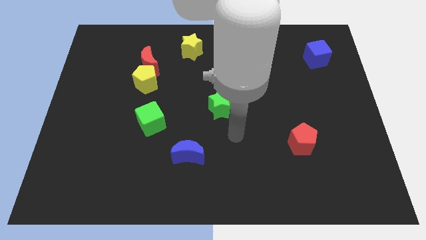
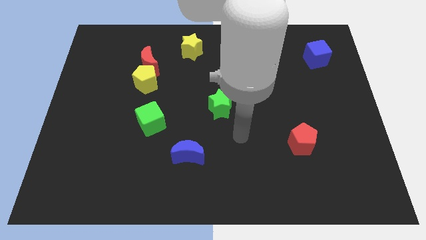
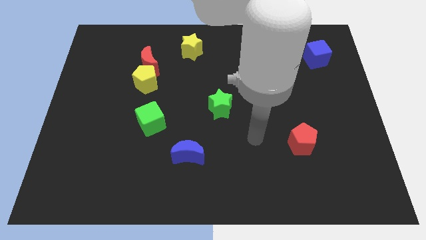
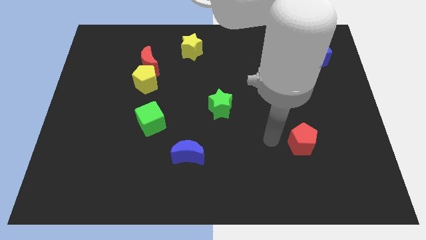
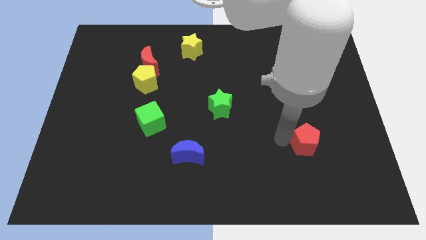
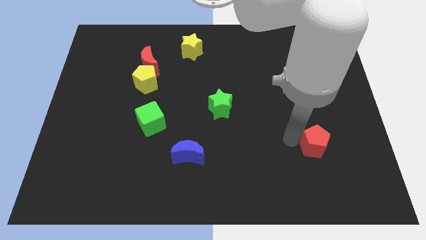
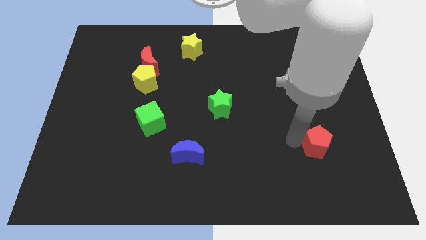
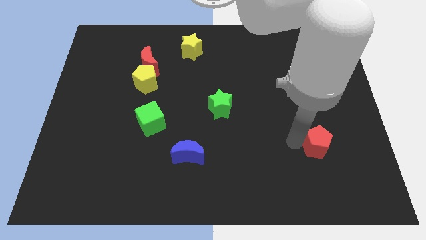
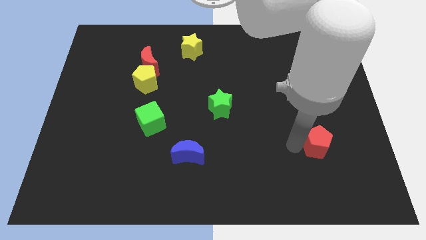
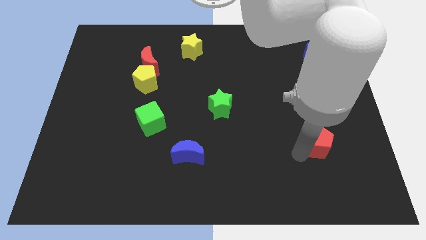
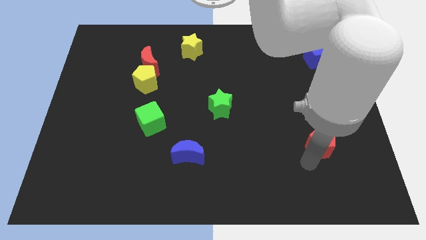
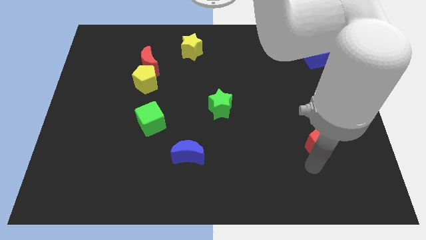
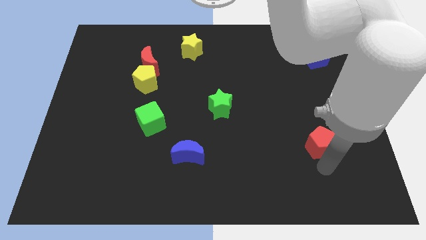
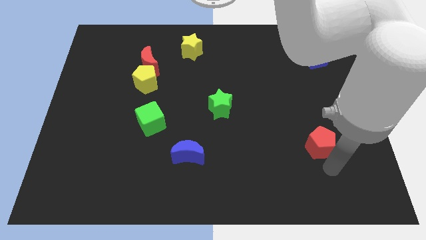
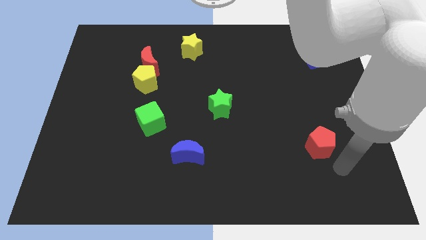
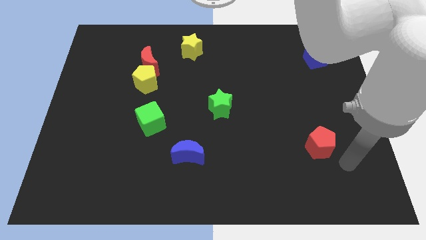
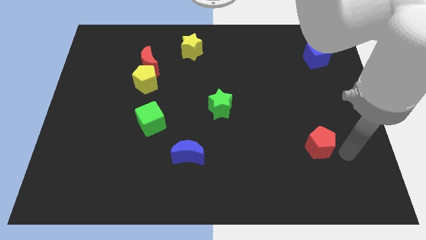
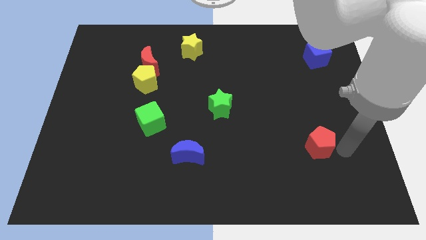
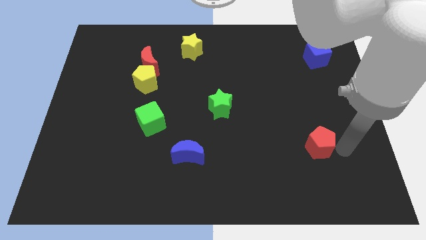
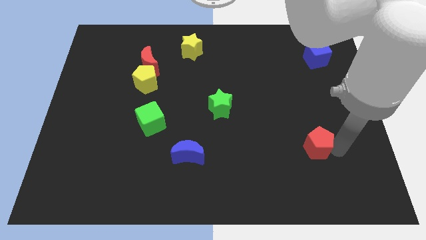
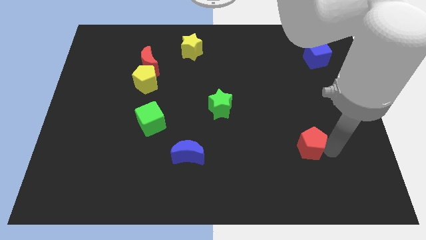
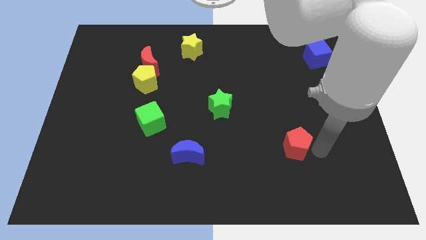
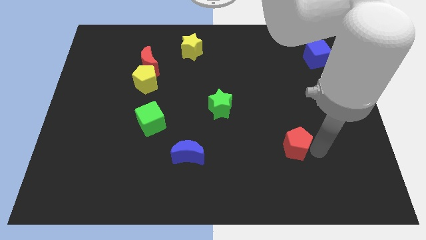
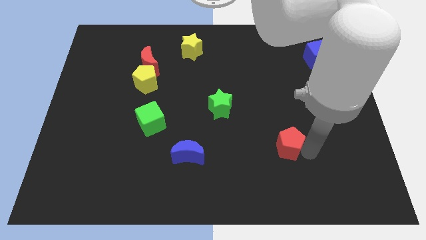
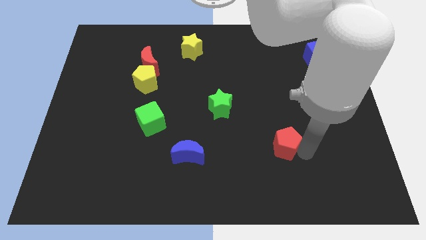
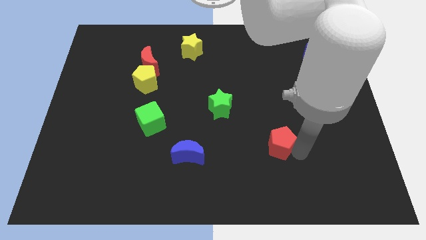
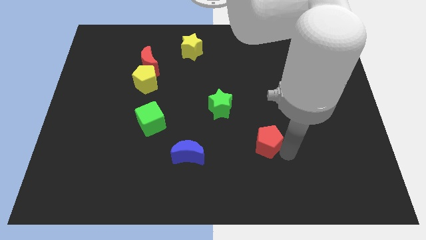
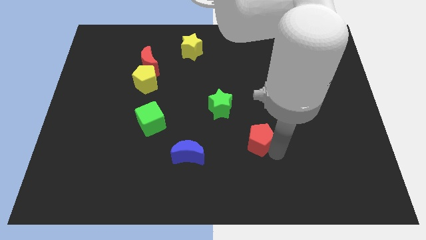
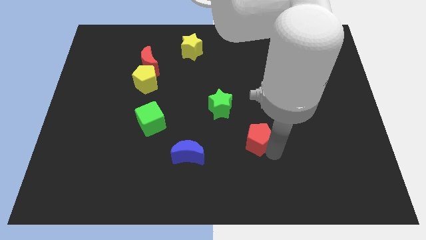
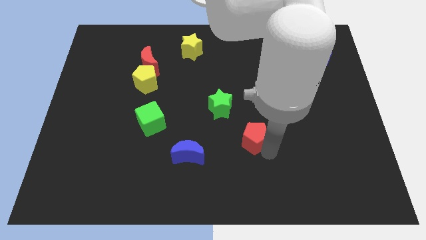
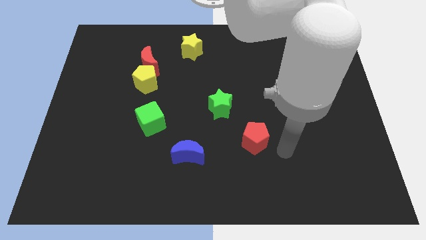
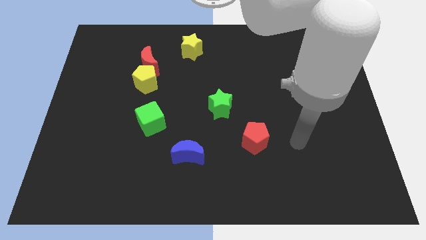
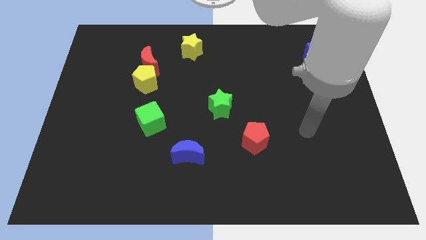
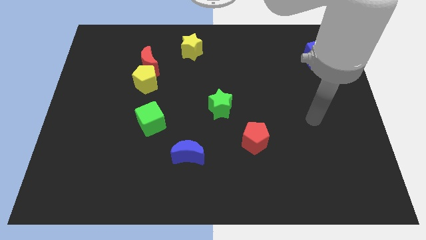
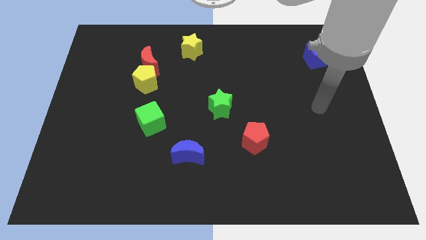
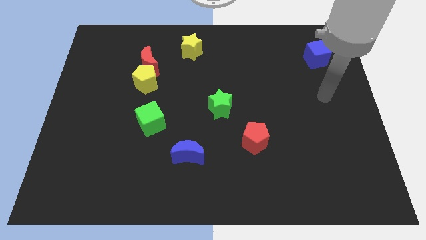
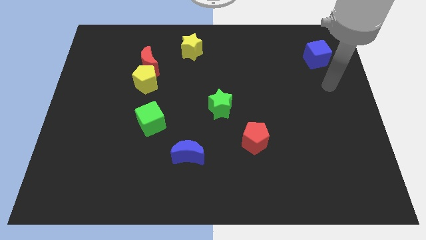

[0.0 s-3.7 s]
place the red pentagon to the right of the green cube

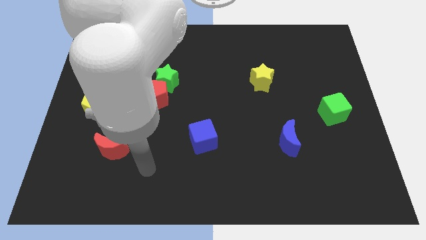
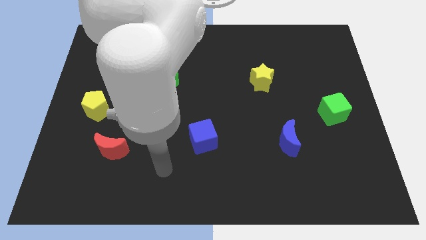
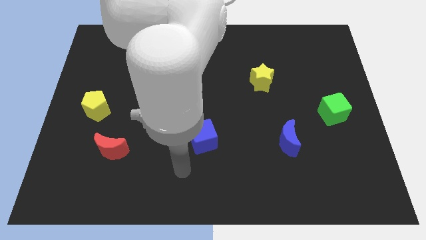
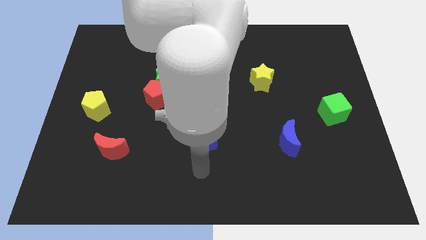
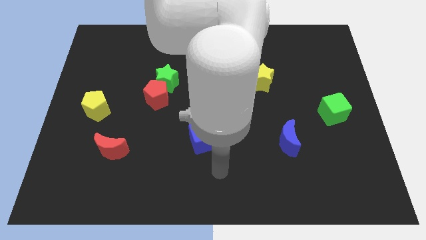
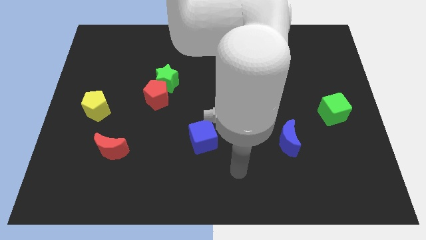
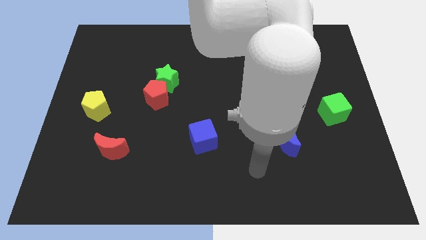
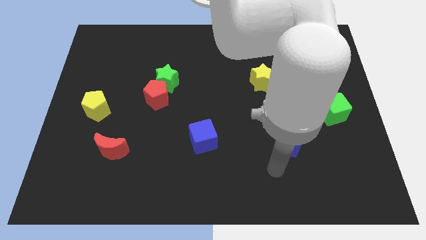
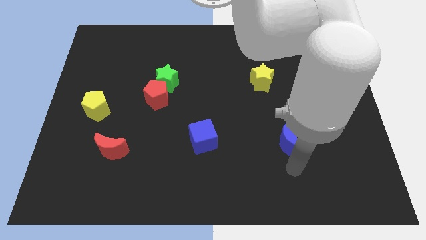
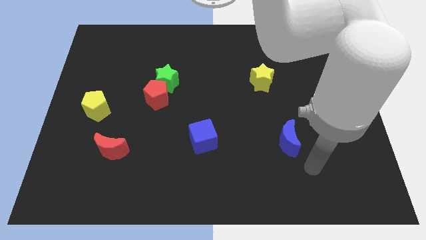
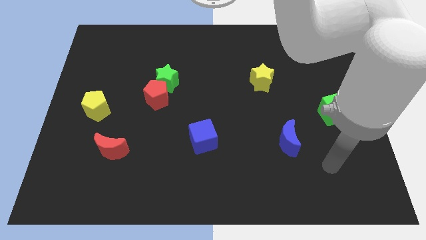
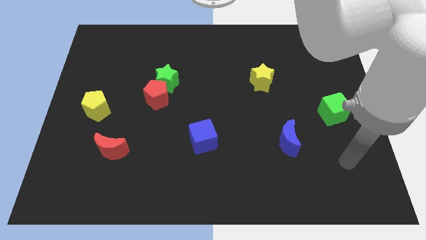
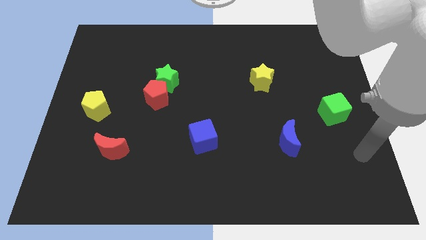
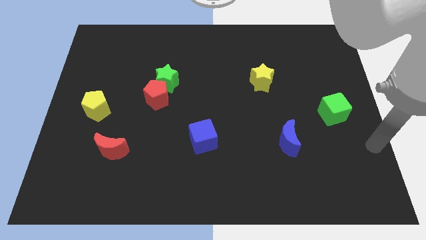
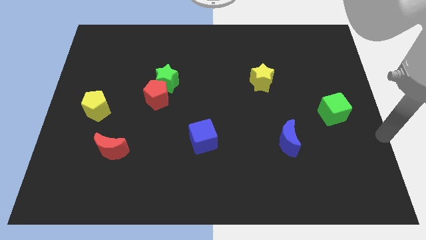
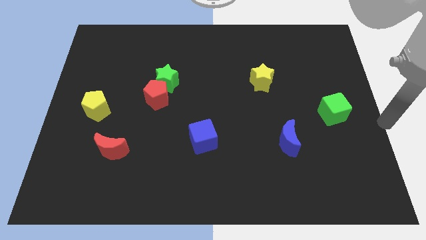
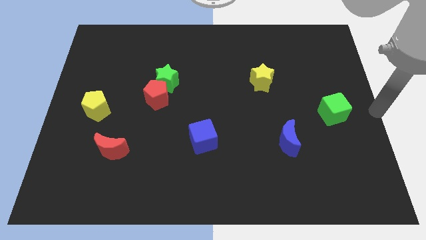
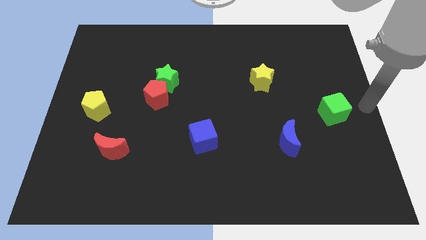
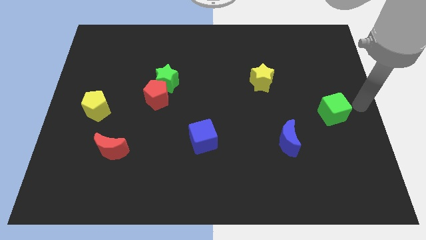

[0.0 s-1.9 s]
move the arm towards the right center of the board

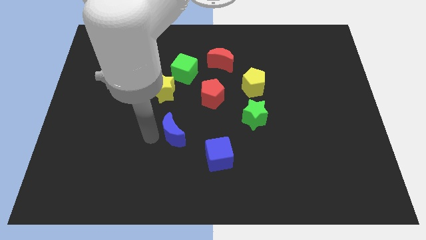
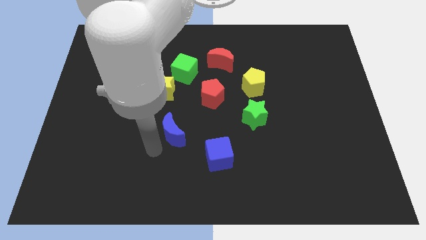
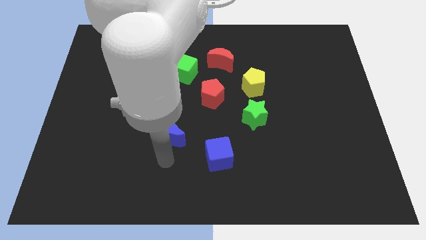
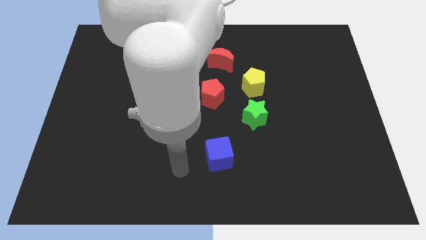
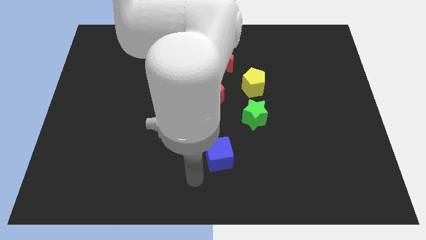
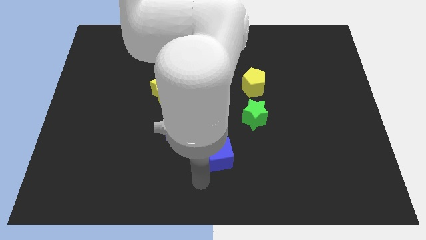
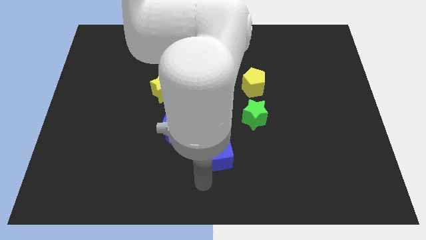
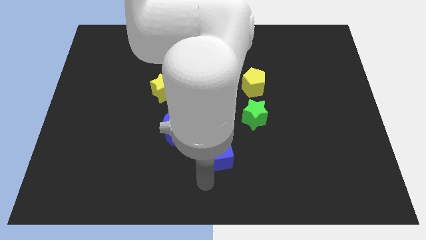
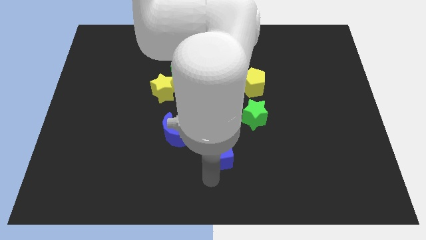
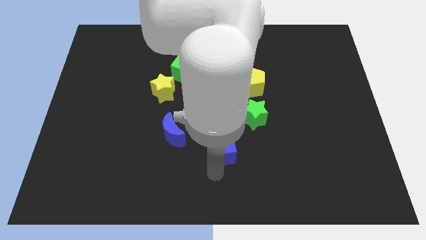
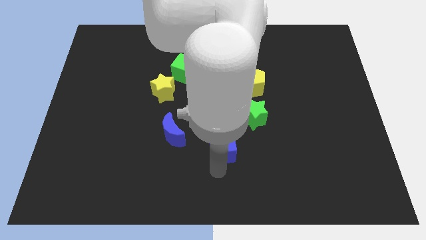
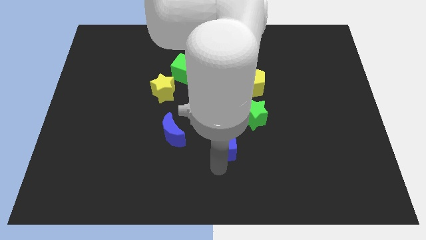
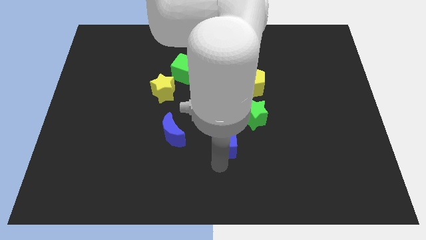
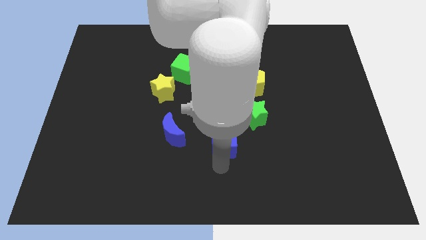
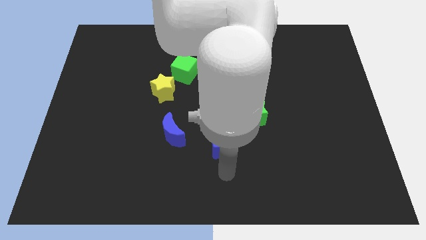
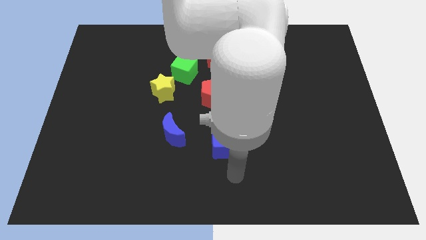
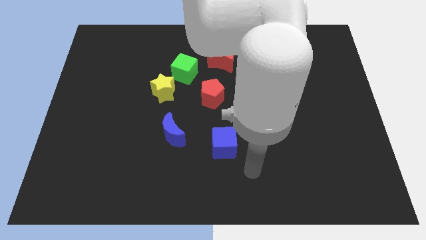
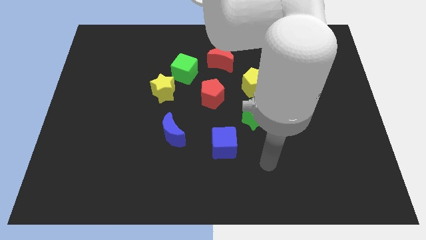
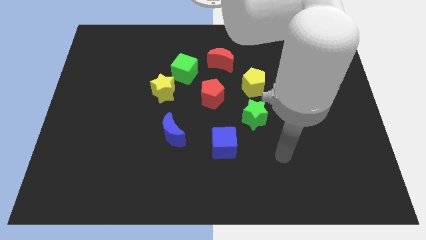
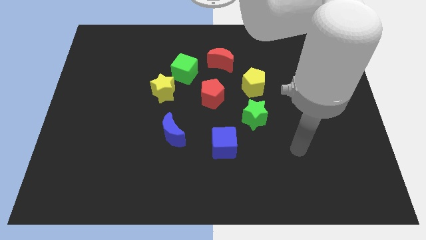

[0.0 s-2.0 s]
adjust the blue cube into the circle in between the green star and blue crescent

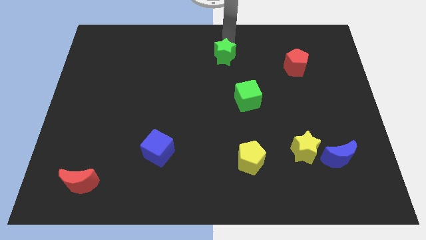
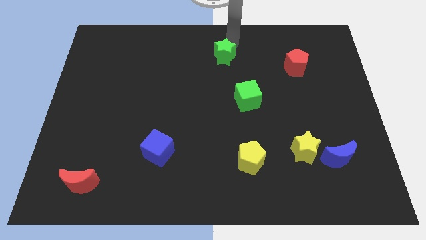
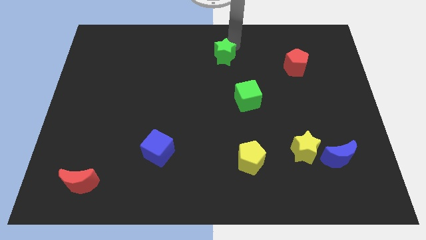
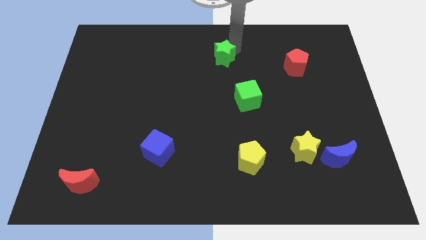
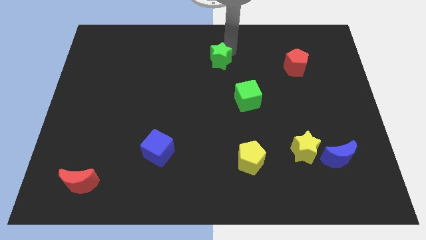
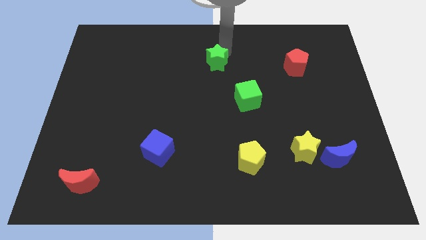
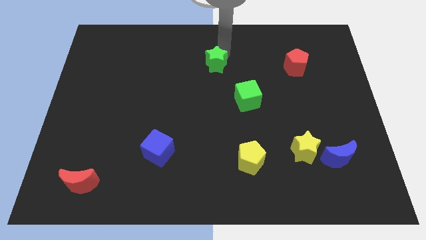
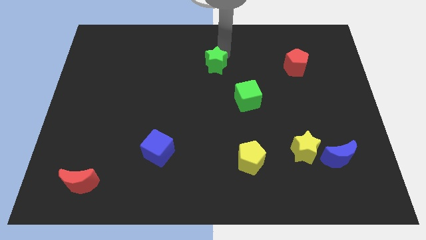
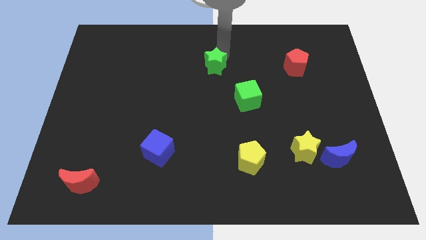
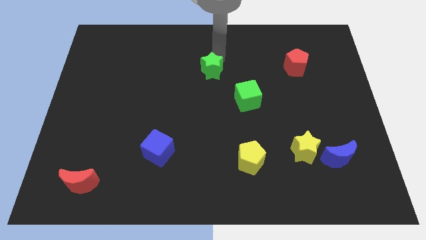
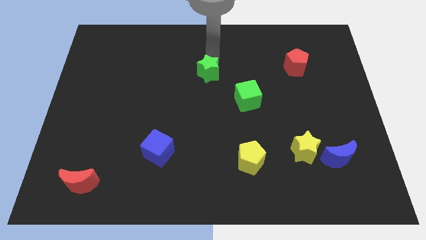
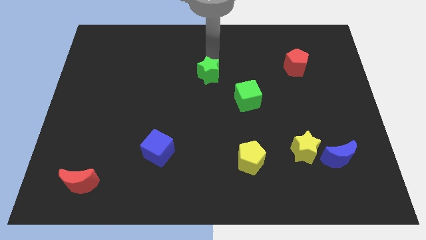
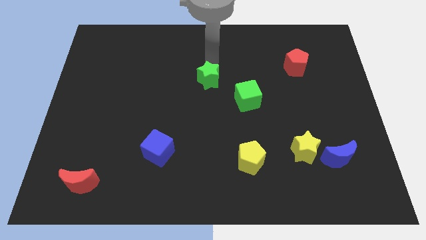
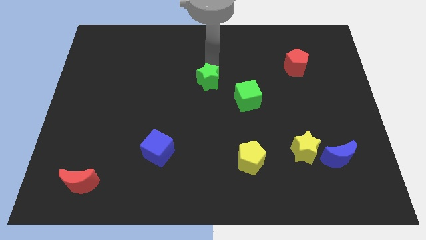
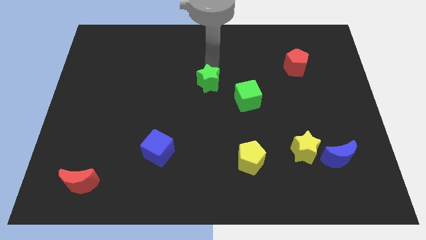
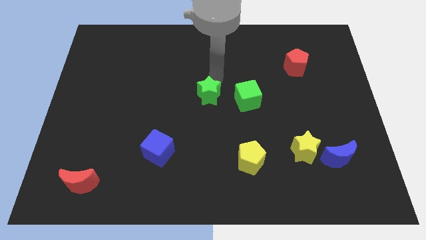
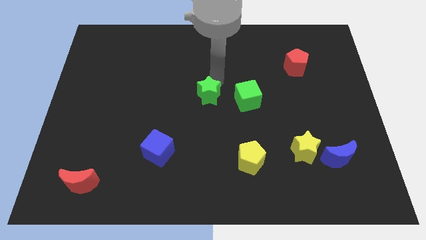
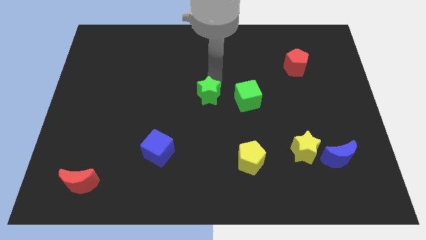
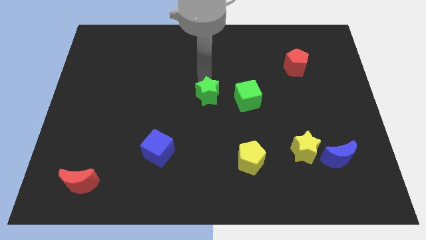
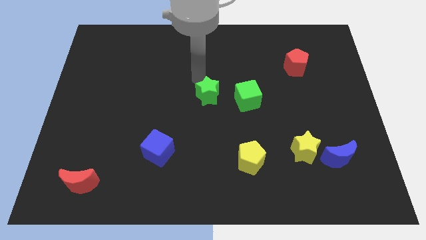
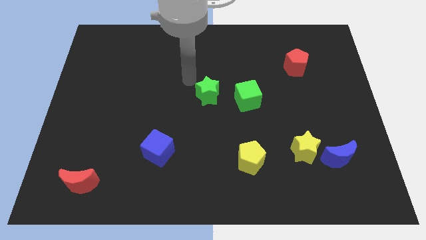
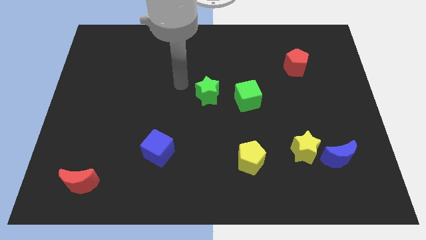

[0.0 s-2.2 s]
put the green star left to the green cube
